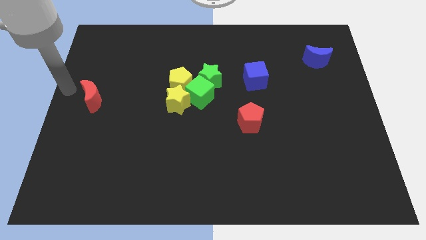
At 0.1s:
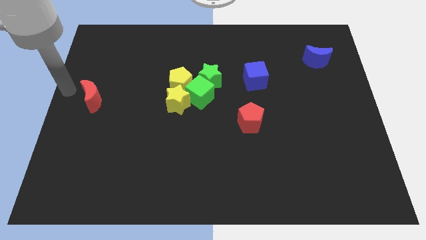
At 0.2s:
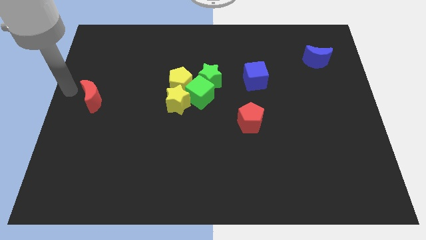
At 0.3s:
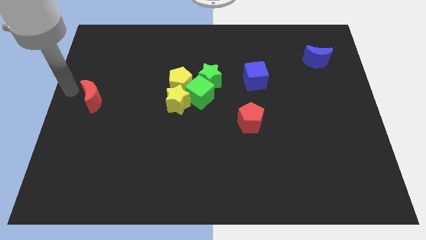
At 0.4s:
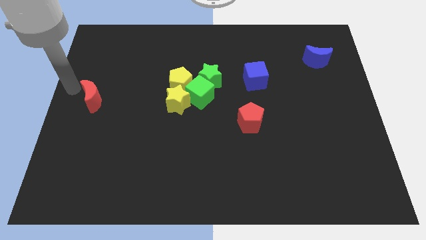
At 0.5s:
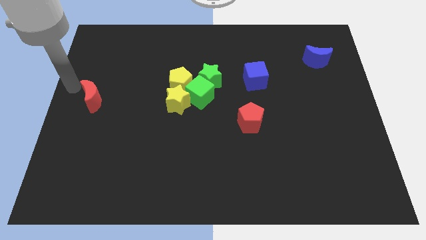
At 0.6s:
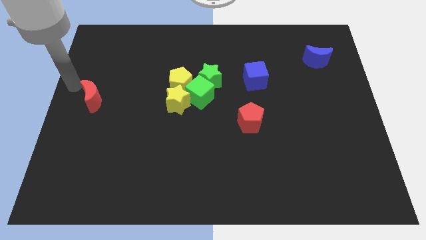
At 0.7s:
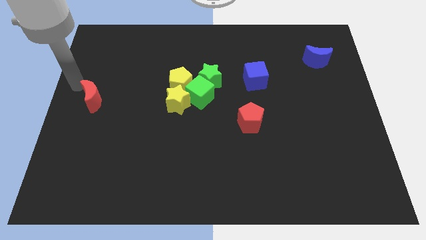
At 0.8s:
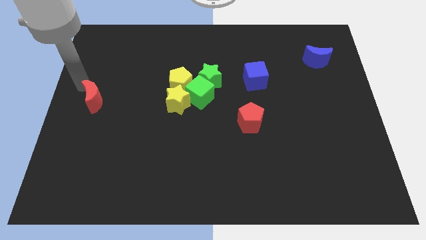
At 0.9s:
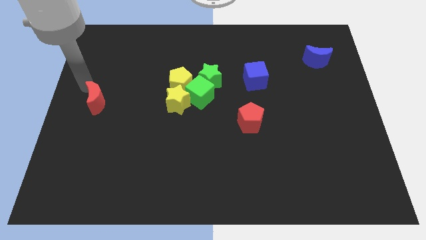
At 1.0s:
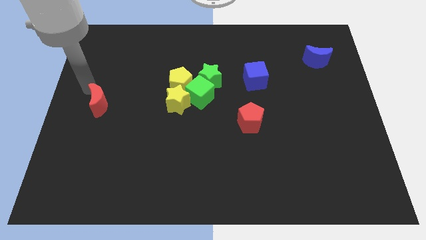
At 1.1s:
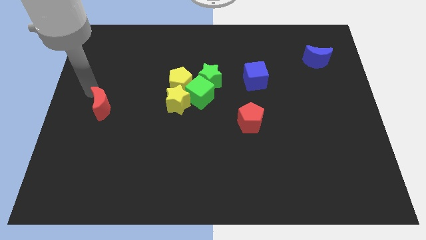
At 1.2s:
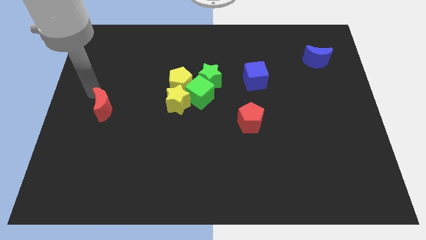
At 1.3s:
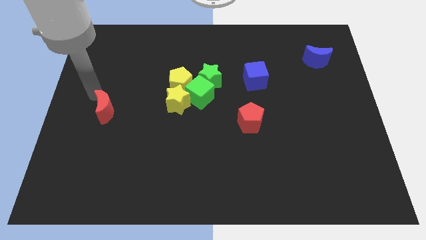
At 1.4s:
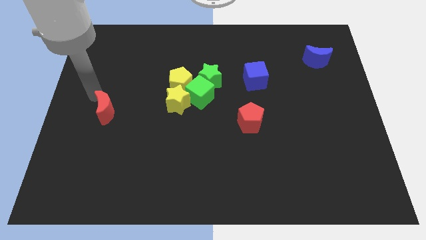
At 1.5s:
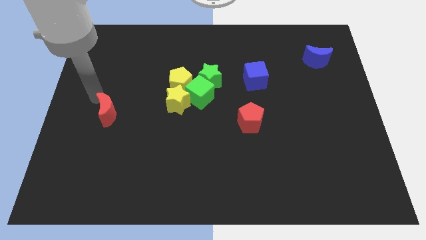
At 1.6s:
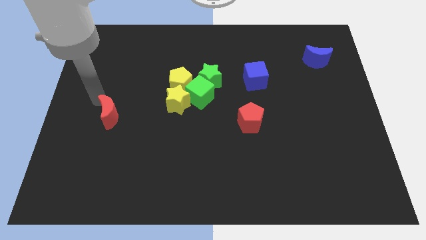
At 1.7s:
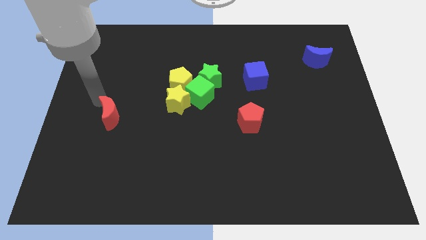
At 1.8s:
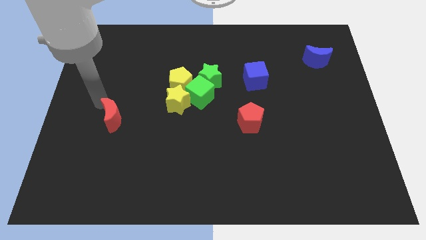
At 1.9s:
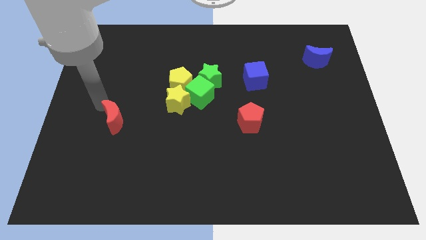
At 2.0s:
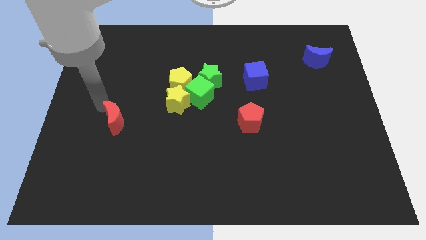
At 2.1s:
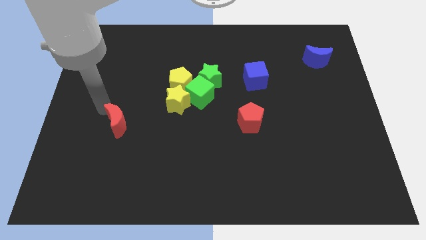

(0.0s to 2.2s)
push the red moon slightly downward

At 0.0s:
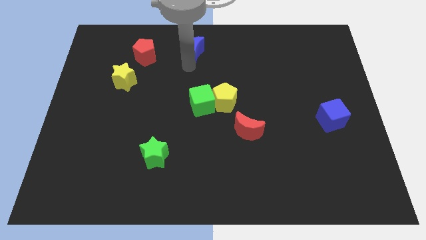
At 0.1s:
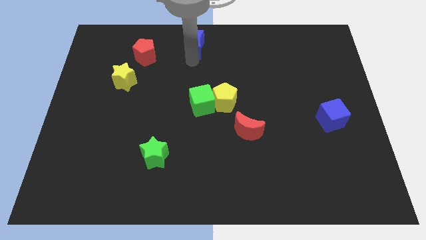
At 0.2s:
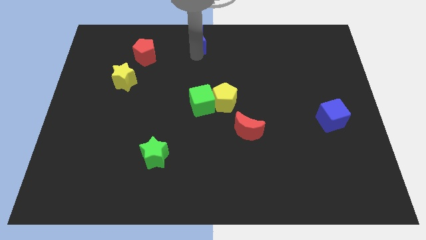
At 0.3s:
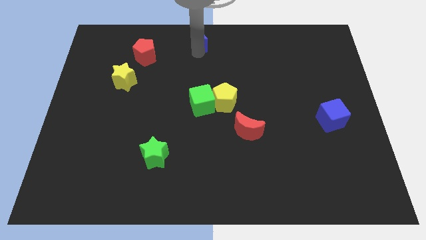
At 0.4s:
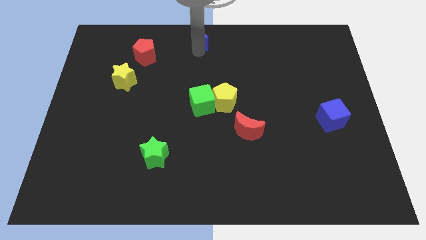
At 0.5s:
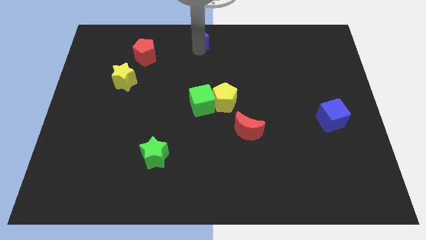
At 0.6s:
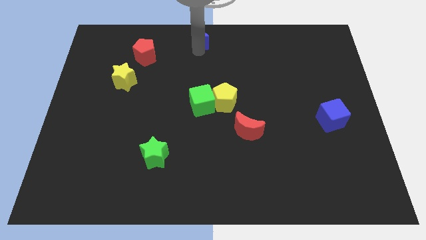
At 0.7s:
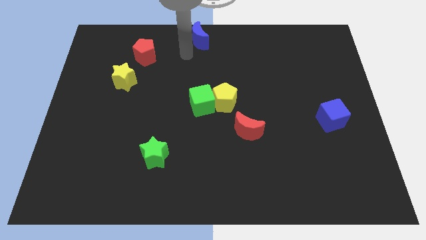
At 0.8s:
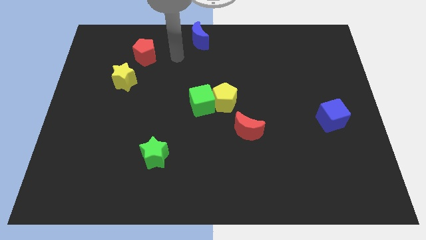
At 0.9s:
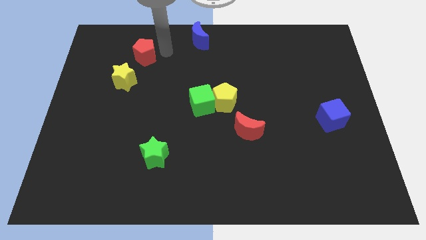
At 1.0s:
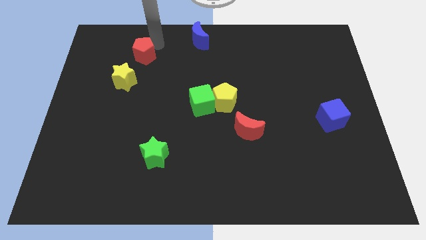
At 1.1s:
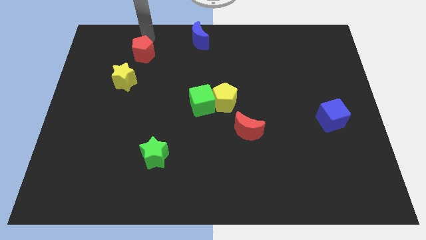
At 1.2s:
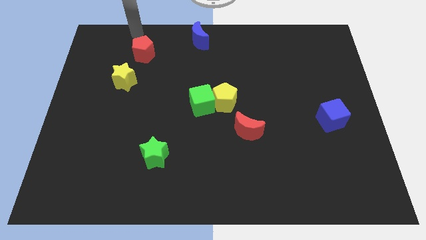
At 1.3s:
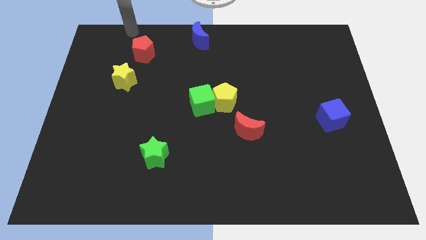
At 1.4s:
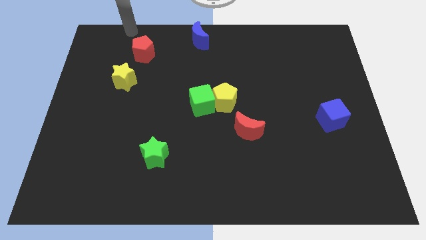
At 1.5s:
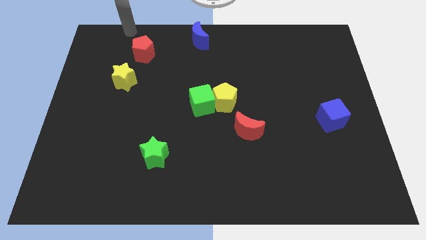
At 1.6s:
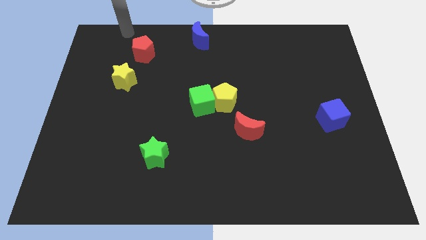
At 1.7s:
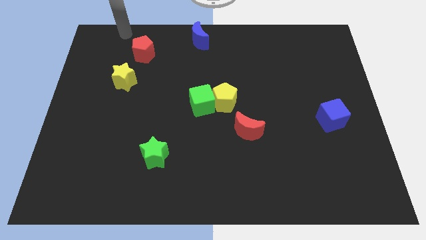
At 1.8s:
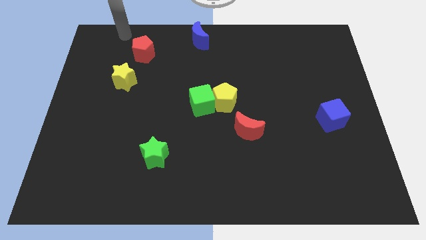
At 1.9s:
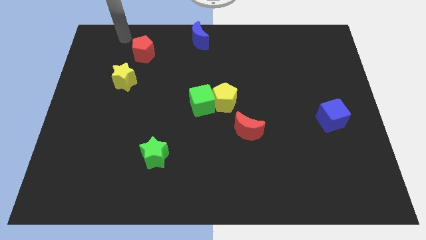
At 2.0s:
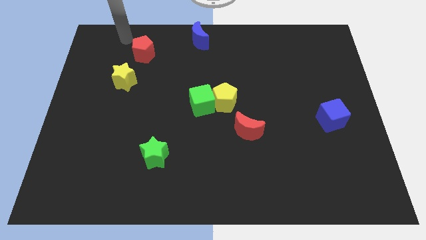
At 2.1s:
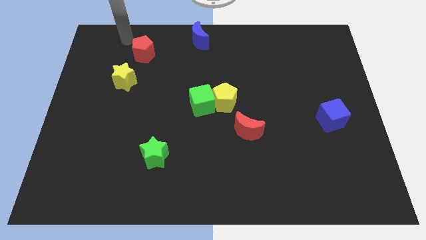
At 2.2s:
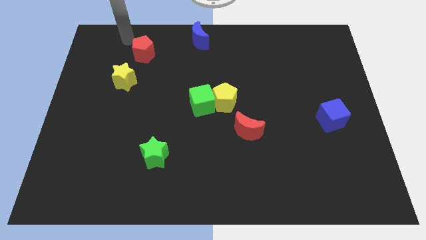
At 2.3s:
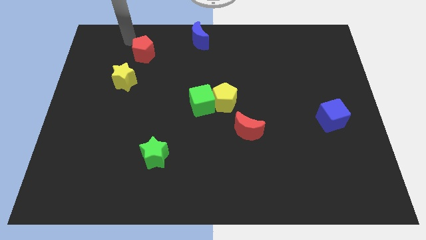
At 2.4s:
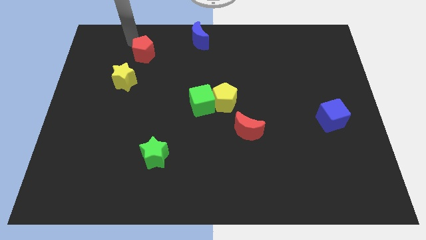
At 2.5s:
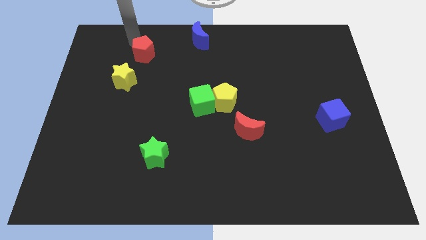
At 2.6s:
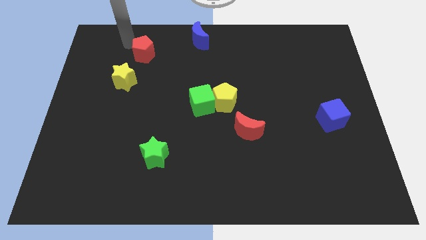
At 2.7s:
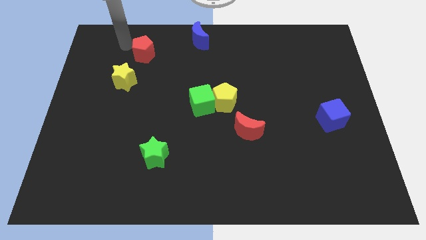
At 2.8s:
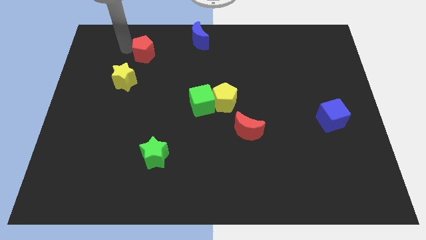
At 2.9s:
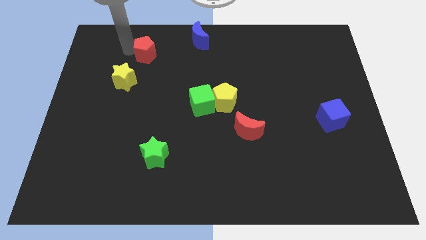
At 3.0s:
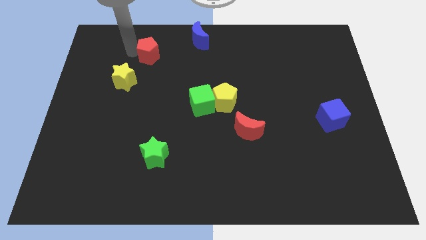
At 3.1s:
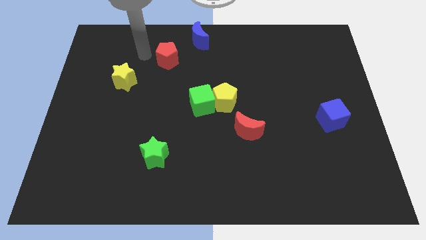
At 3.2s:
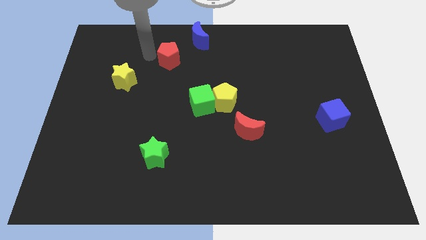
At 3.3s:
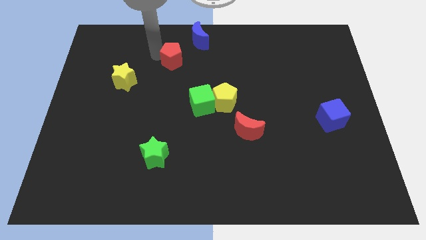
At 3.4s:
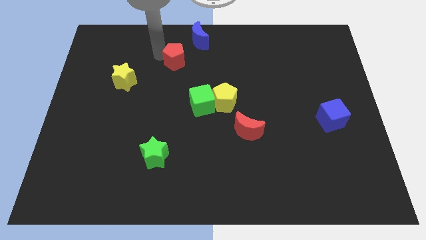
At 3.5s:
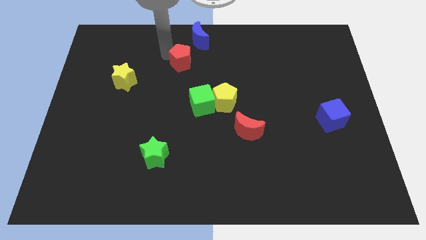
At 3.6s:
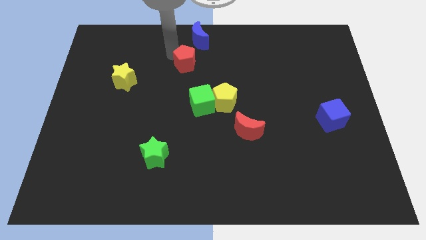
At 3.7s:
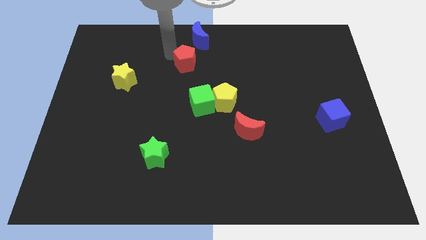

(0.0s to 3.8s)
move the blue crescent to top center of the board

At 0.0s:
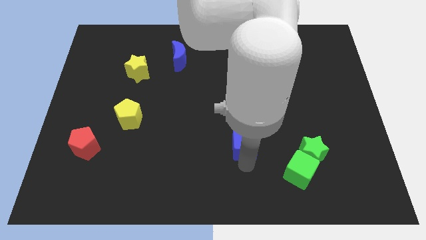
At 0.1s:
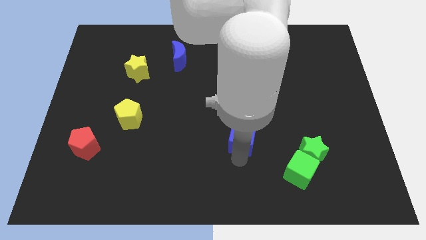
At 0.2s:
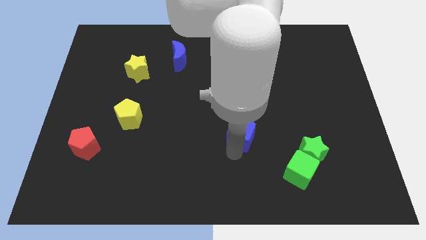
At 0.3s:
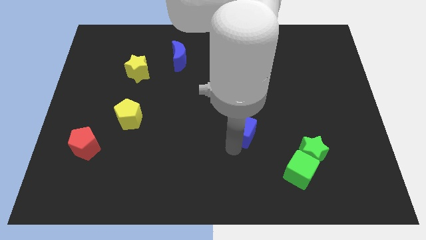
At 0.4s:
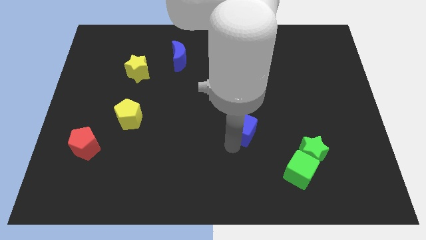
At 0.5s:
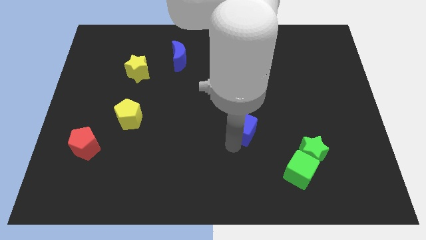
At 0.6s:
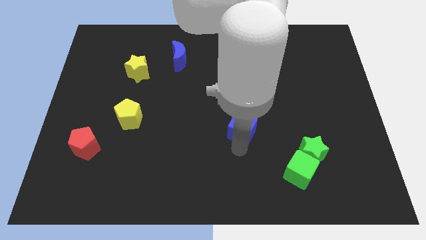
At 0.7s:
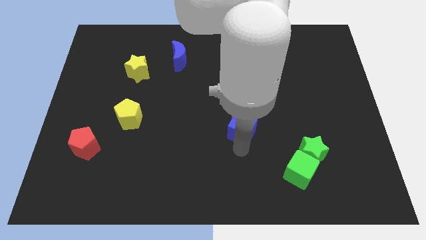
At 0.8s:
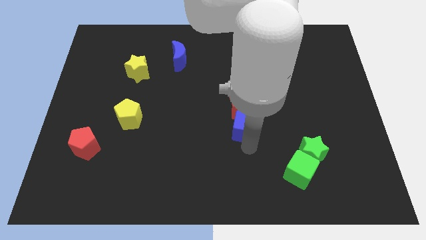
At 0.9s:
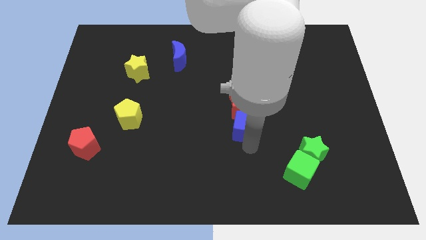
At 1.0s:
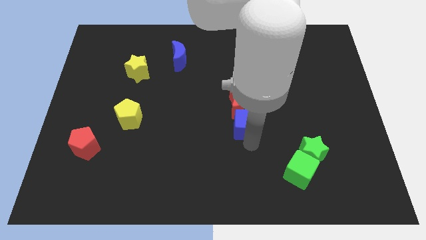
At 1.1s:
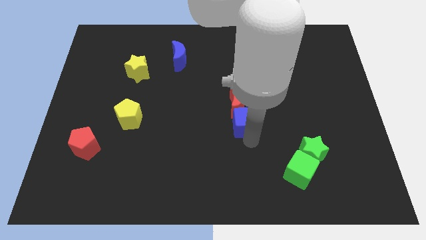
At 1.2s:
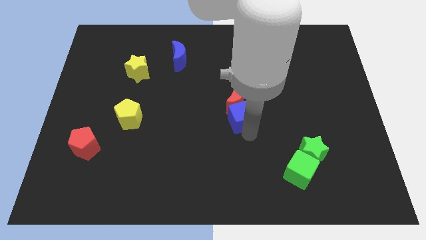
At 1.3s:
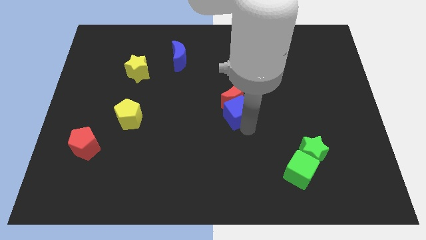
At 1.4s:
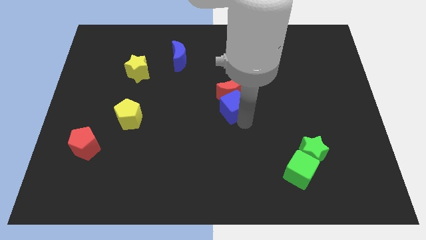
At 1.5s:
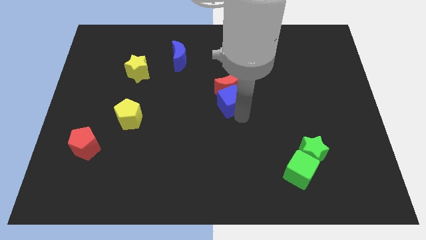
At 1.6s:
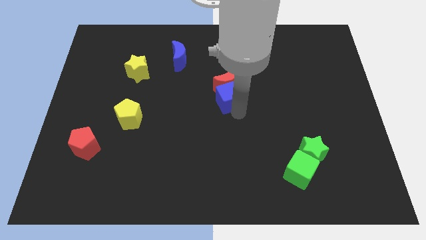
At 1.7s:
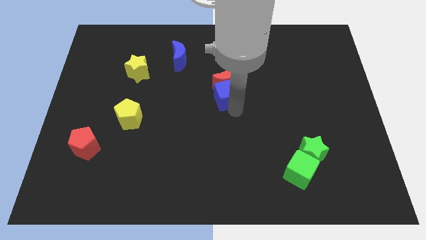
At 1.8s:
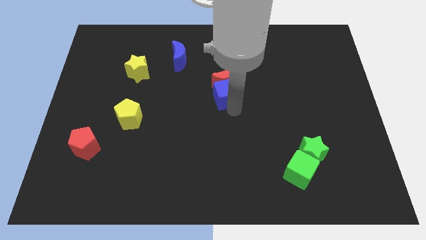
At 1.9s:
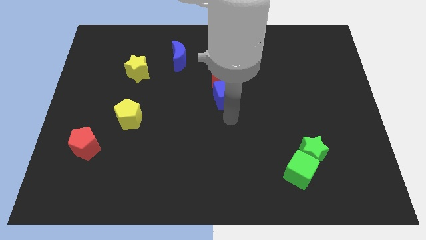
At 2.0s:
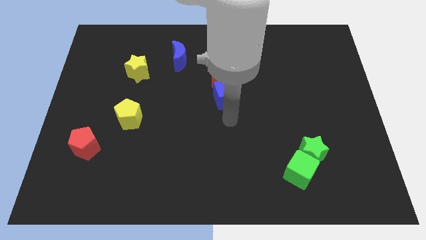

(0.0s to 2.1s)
move the blue cube along with the red crescent to the top

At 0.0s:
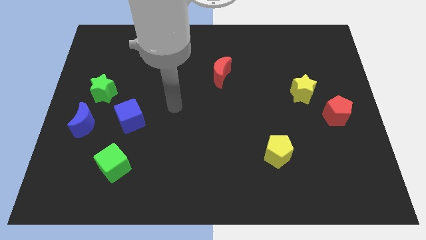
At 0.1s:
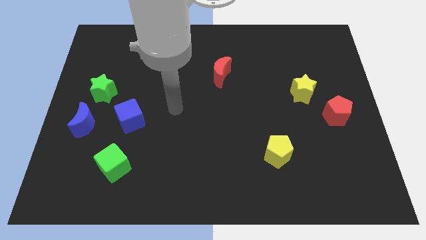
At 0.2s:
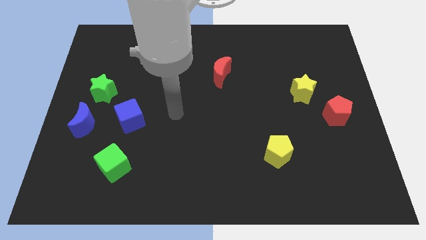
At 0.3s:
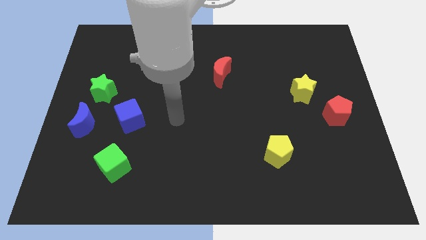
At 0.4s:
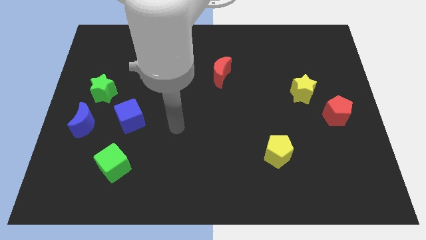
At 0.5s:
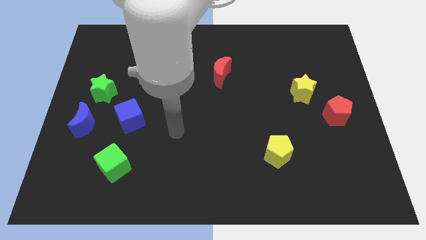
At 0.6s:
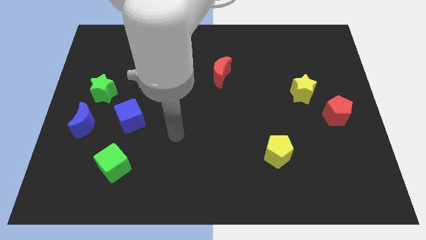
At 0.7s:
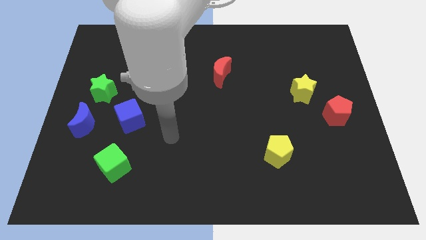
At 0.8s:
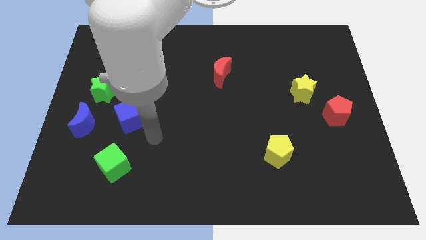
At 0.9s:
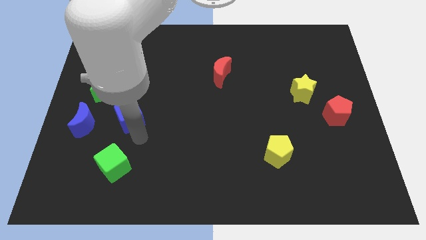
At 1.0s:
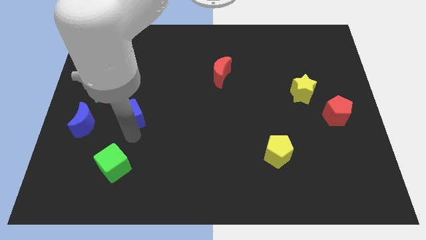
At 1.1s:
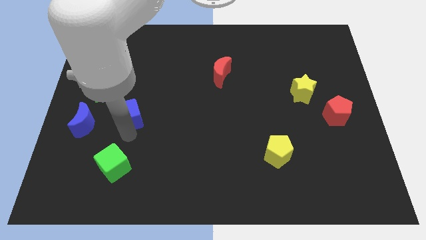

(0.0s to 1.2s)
move your arm to the bottom of blue cube
